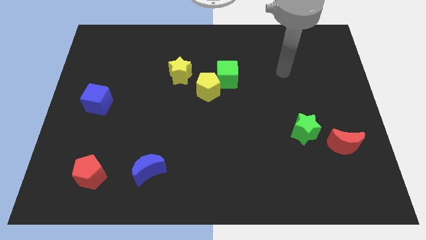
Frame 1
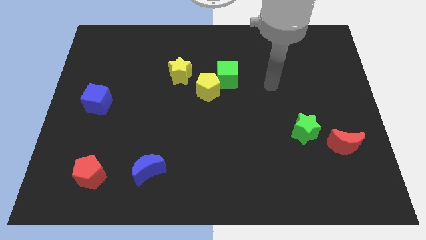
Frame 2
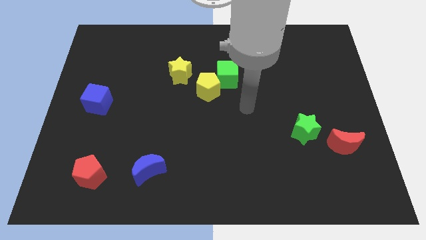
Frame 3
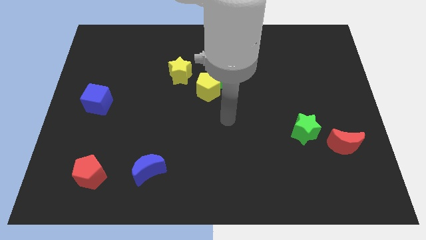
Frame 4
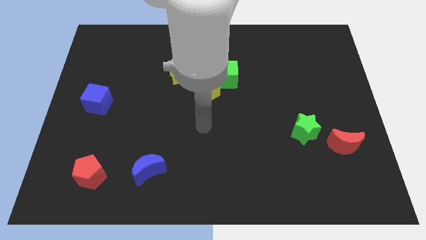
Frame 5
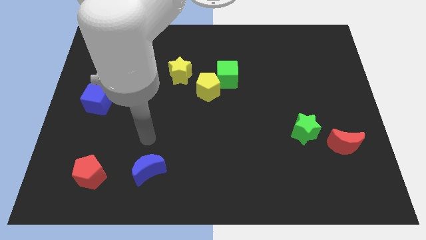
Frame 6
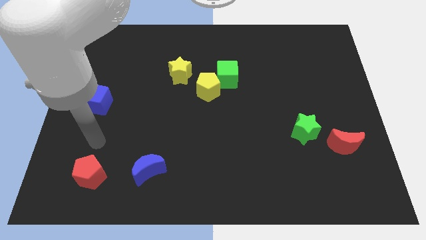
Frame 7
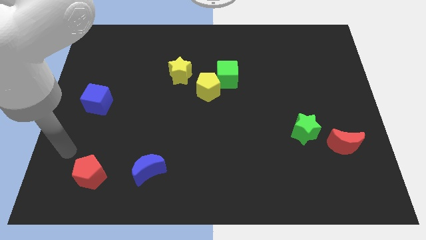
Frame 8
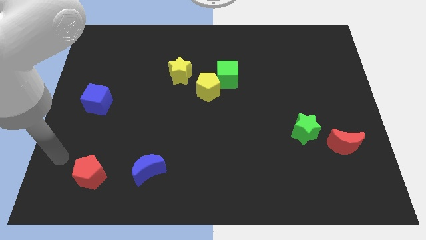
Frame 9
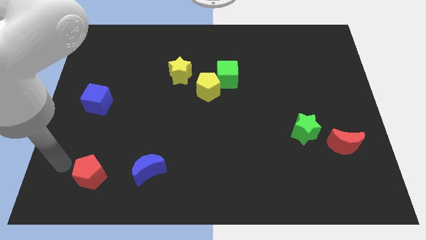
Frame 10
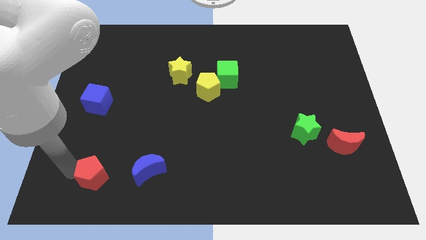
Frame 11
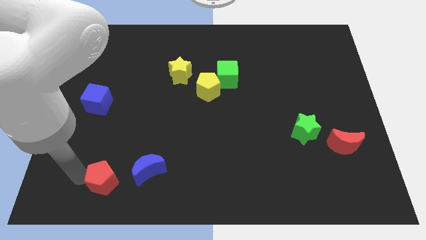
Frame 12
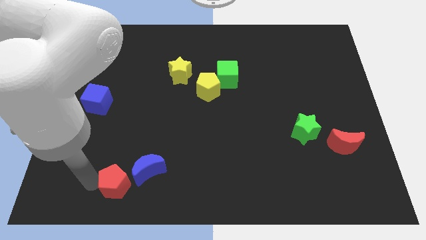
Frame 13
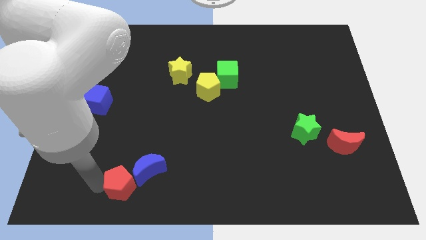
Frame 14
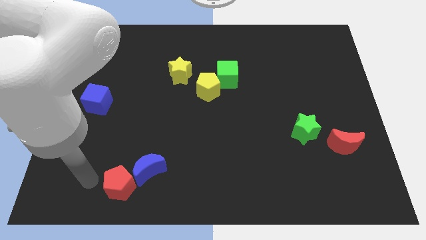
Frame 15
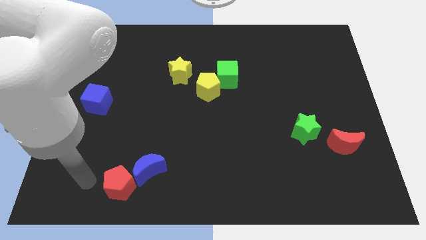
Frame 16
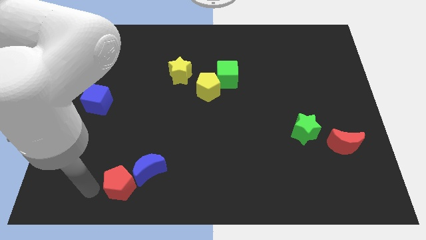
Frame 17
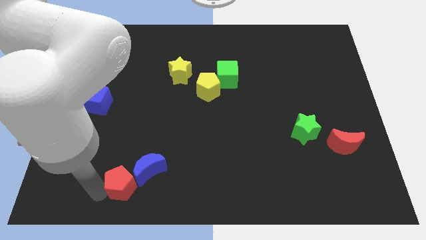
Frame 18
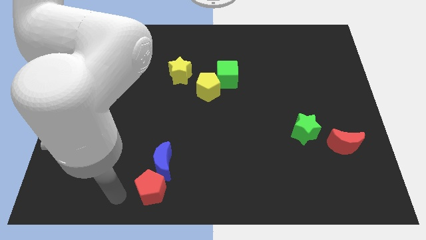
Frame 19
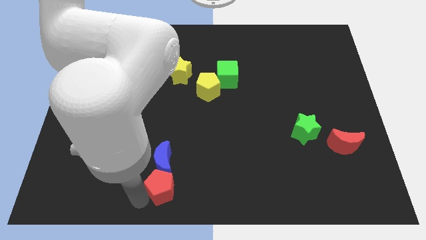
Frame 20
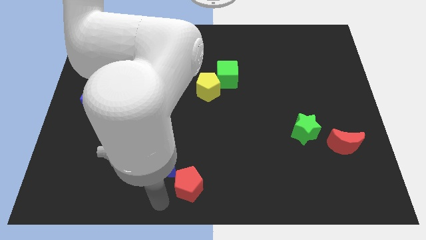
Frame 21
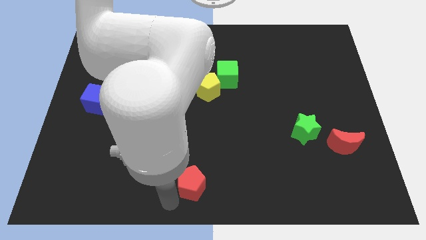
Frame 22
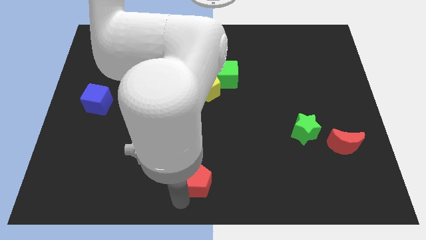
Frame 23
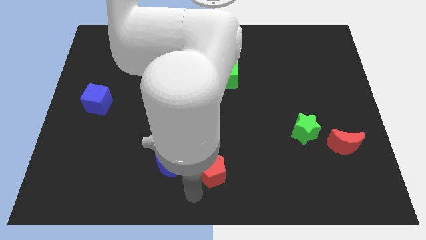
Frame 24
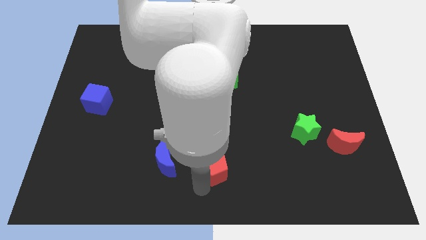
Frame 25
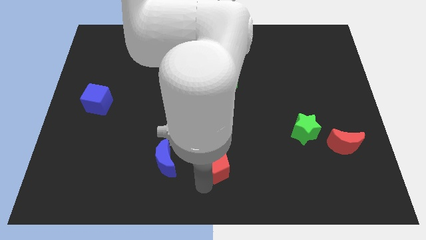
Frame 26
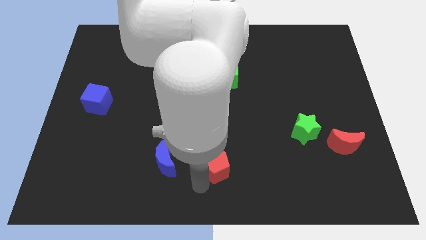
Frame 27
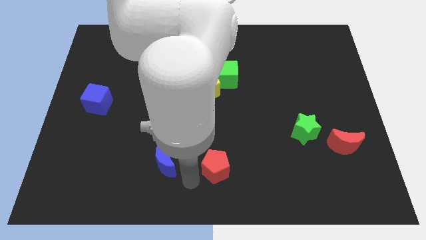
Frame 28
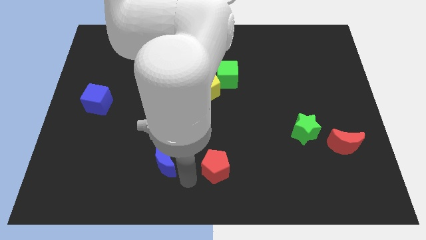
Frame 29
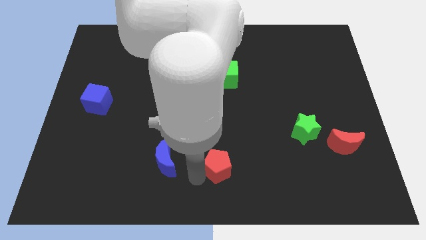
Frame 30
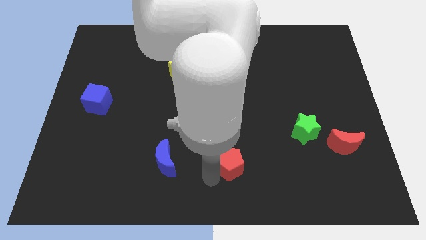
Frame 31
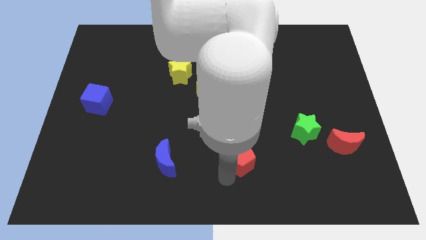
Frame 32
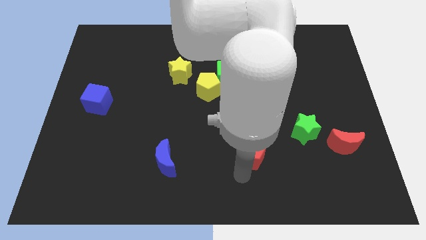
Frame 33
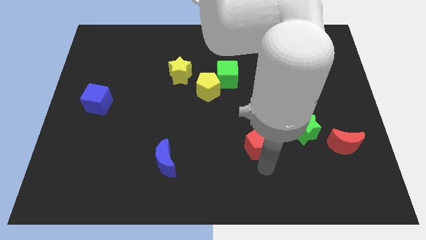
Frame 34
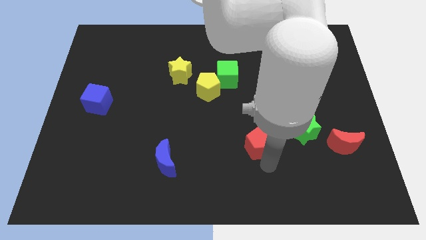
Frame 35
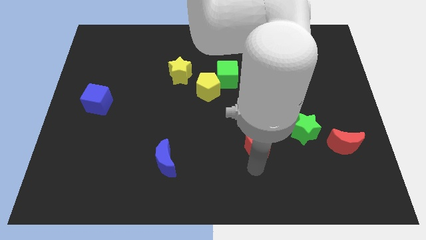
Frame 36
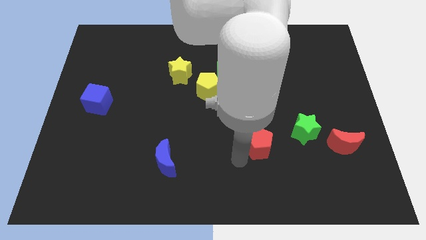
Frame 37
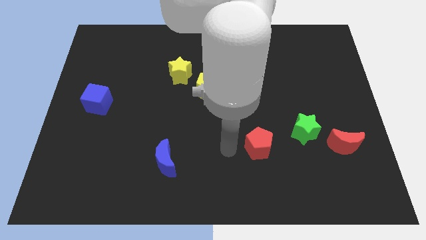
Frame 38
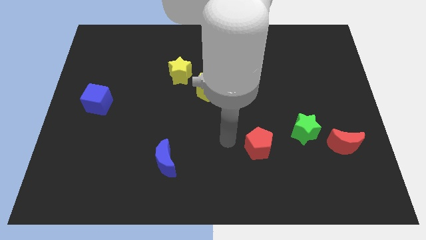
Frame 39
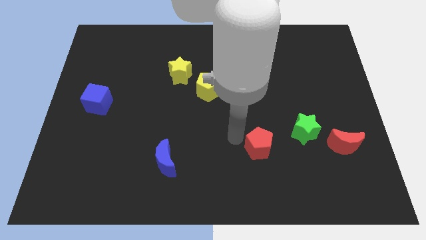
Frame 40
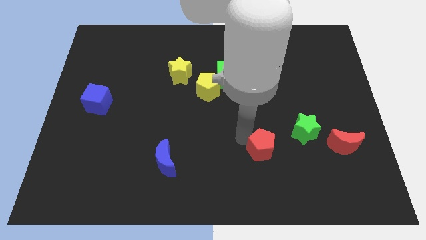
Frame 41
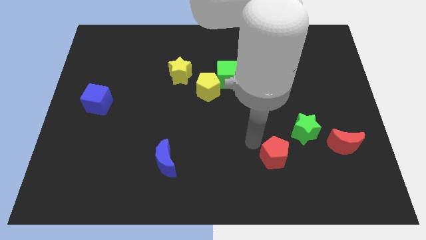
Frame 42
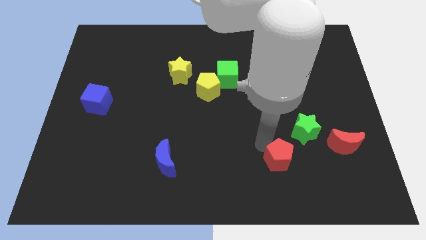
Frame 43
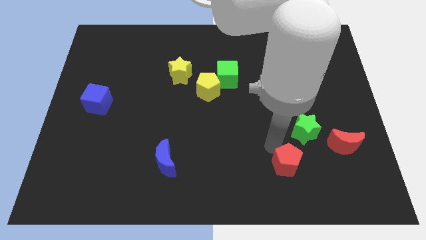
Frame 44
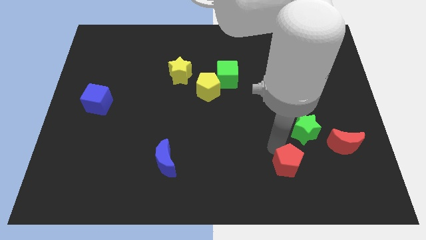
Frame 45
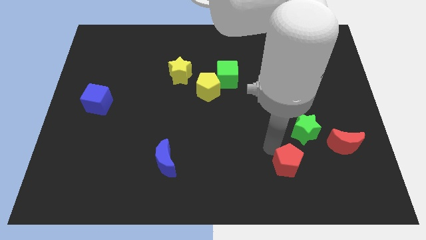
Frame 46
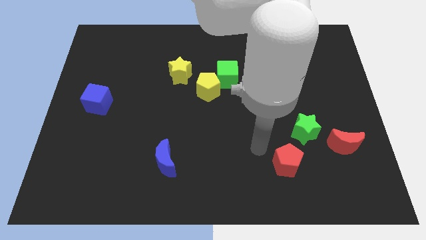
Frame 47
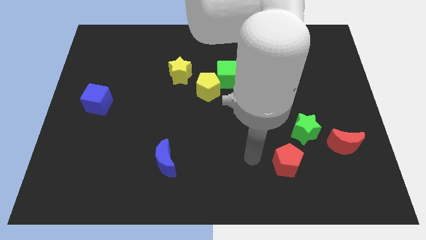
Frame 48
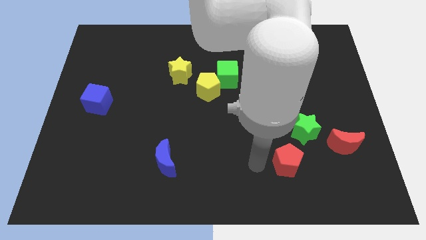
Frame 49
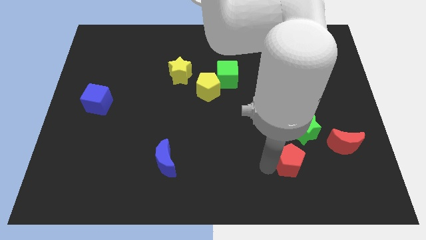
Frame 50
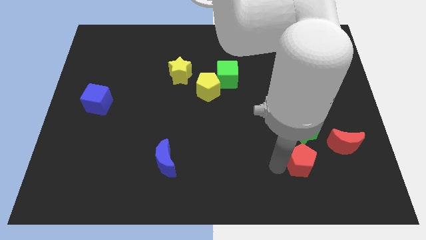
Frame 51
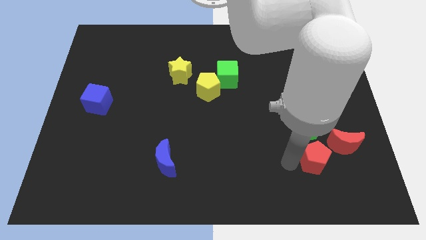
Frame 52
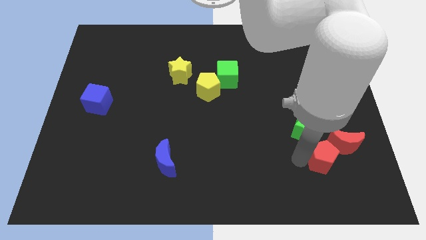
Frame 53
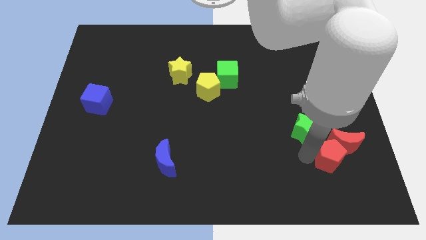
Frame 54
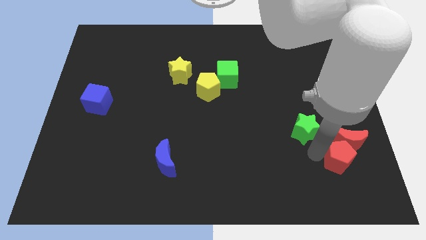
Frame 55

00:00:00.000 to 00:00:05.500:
push the red pentagon close to the red moon

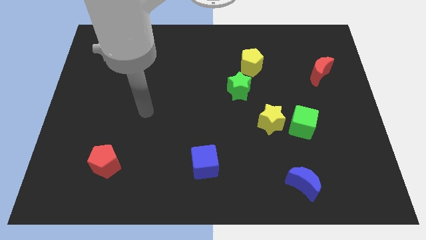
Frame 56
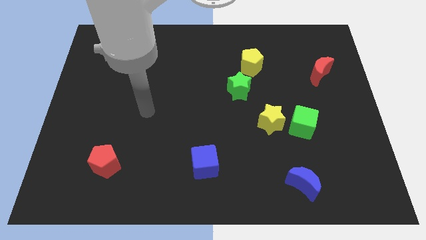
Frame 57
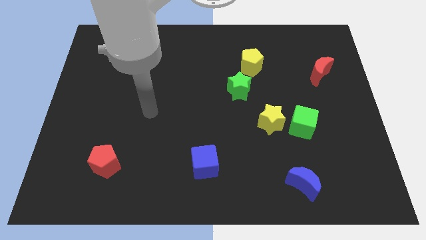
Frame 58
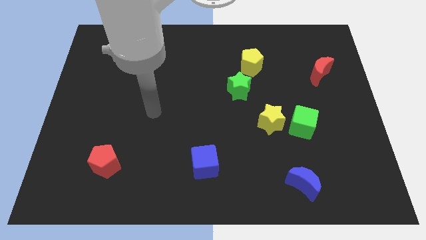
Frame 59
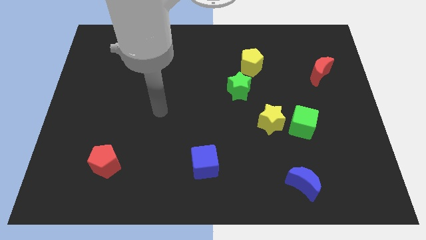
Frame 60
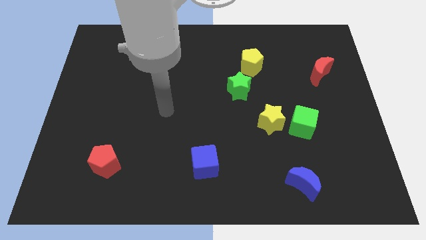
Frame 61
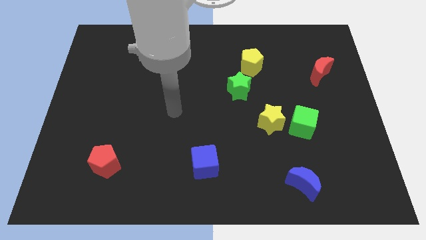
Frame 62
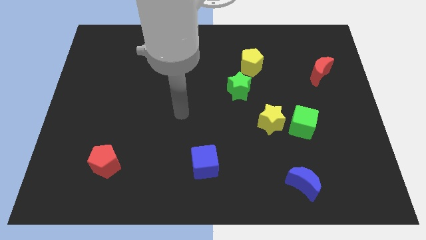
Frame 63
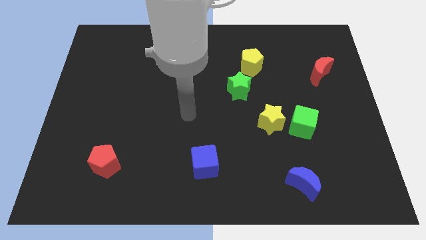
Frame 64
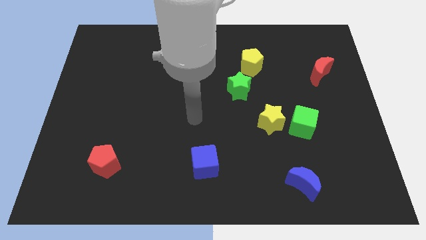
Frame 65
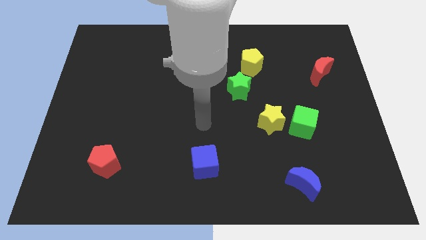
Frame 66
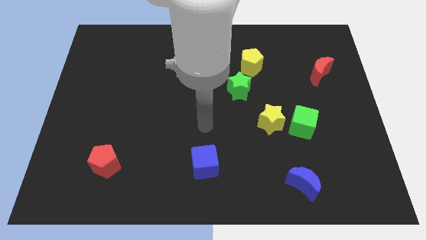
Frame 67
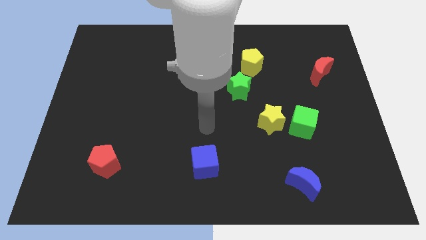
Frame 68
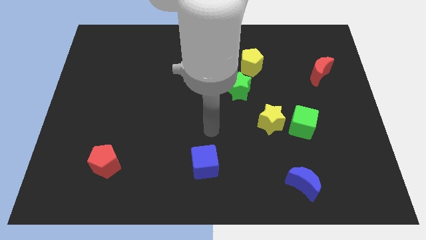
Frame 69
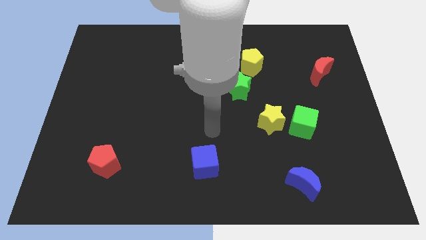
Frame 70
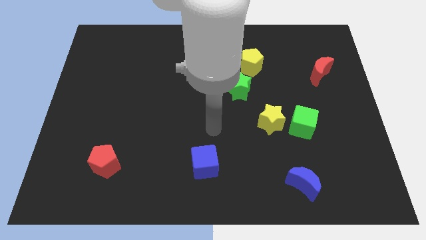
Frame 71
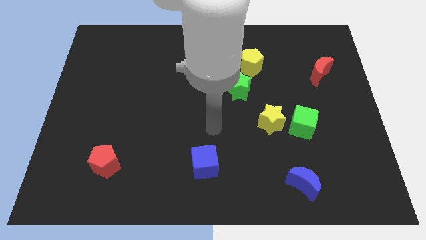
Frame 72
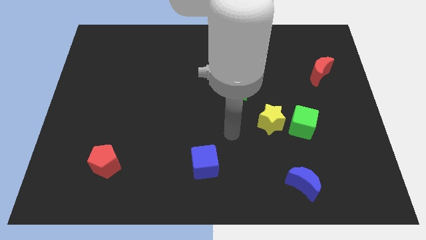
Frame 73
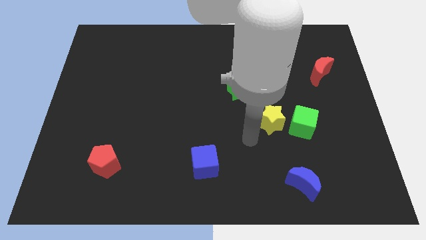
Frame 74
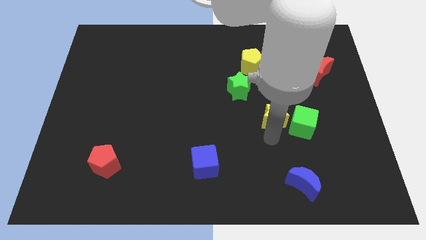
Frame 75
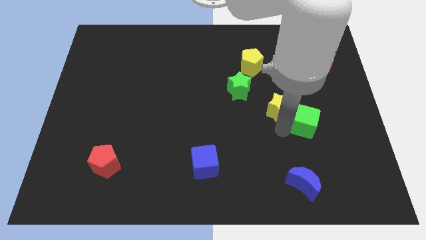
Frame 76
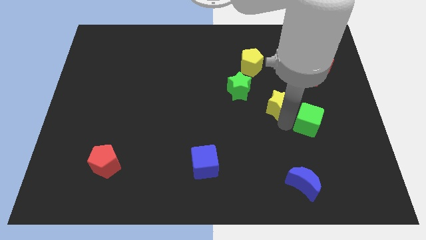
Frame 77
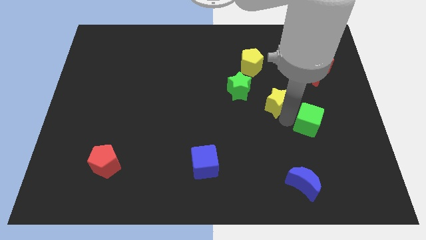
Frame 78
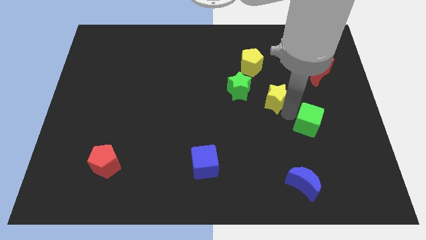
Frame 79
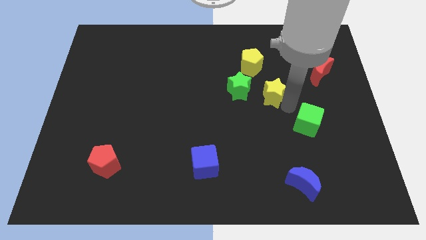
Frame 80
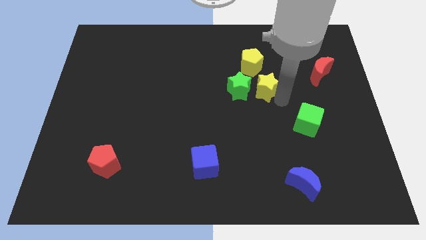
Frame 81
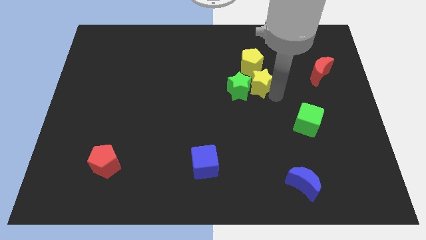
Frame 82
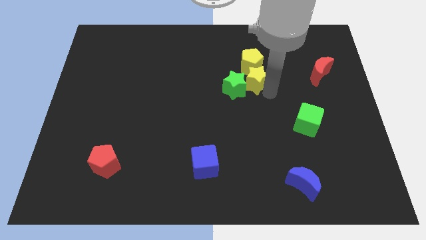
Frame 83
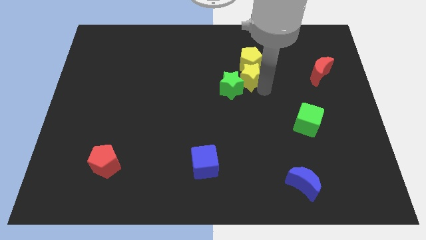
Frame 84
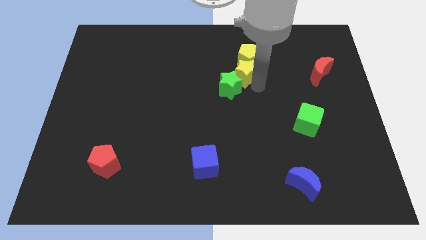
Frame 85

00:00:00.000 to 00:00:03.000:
put the yellow star next to the yellow pentagon
